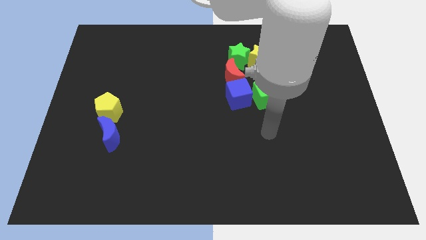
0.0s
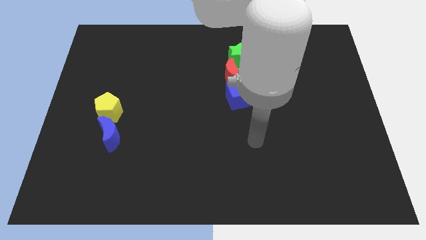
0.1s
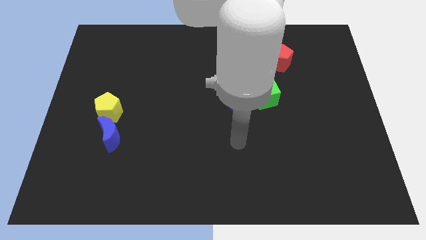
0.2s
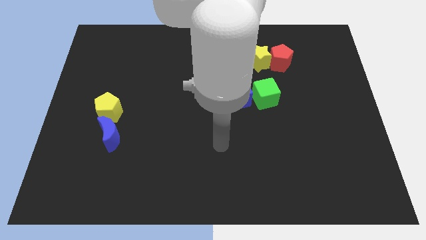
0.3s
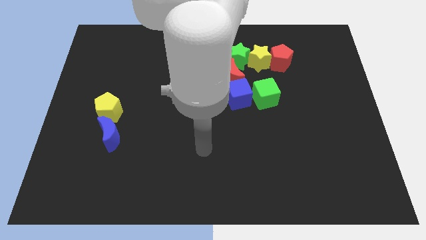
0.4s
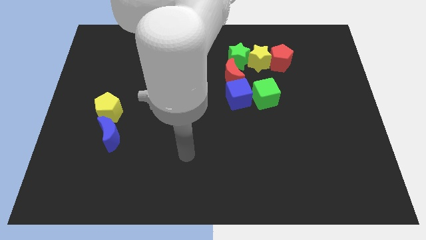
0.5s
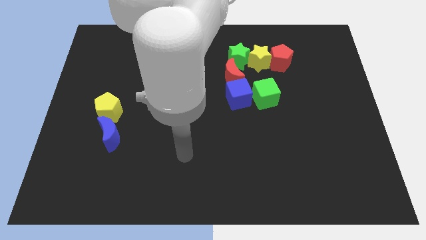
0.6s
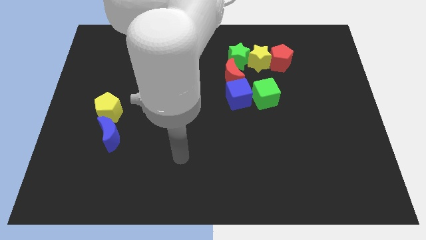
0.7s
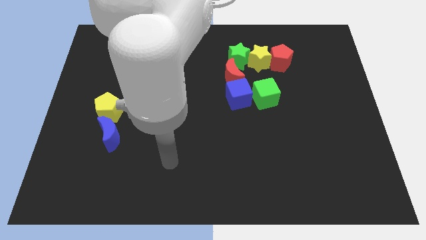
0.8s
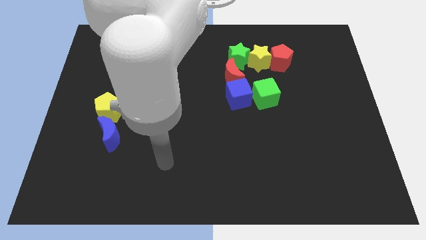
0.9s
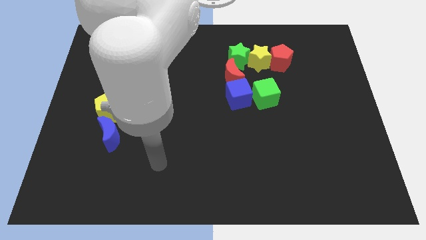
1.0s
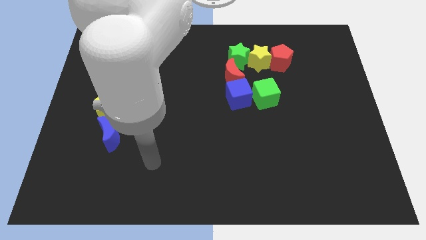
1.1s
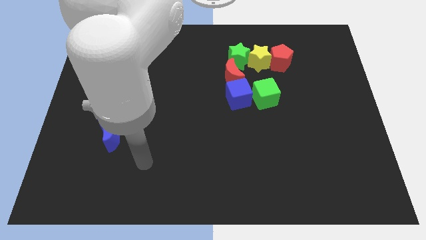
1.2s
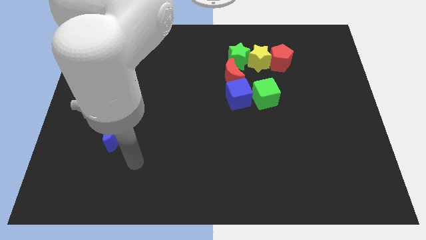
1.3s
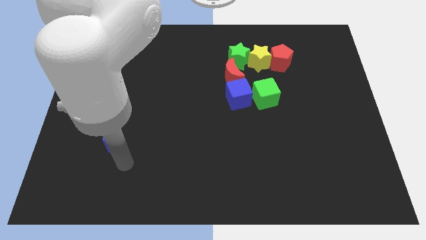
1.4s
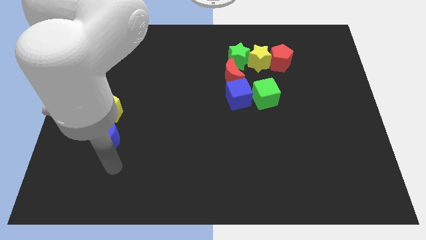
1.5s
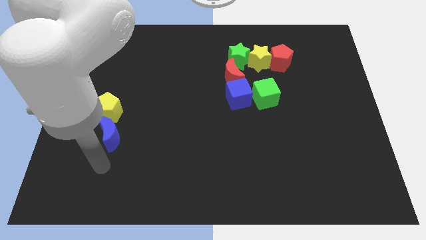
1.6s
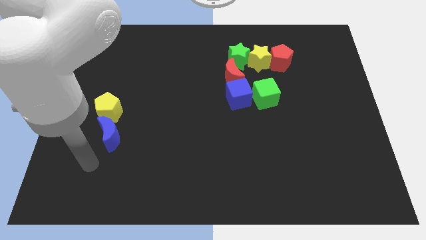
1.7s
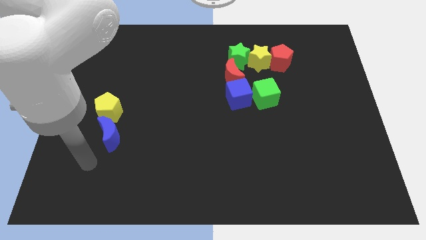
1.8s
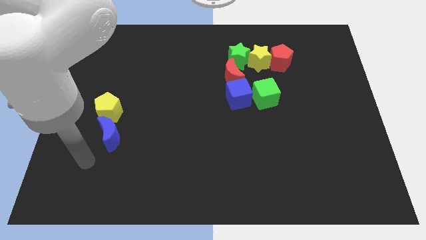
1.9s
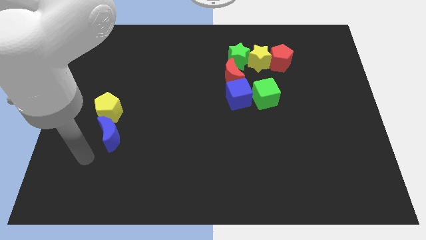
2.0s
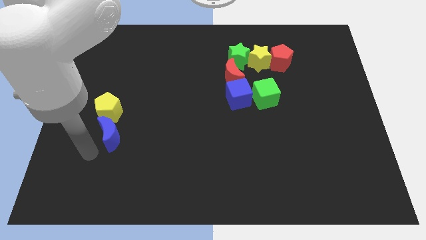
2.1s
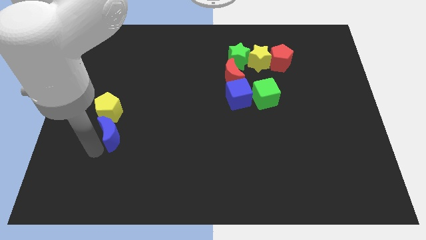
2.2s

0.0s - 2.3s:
move the arm from the center of the board to the bottom left of the board

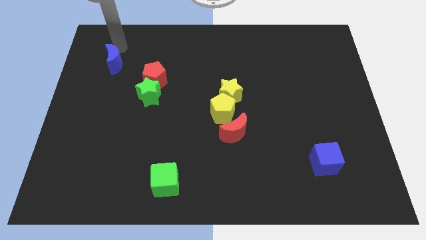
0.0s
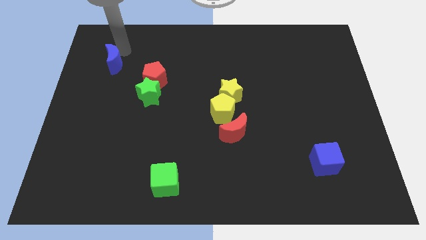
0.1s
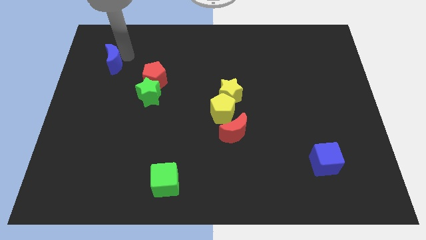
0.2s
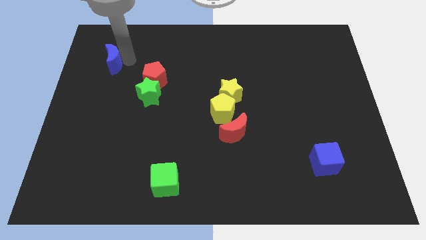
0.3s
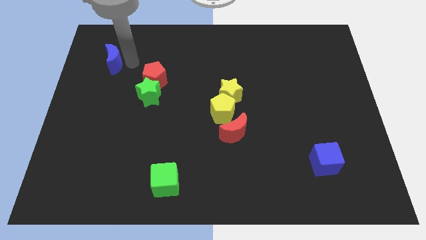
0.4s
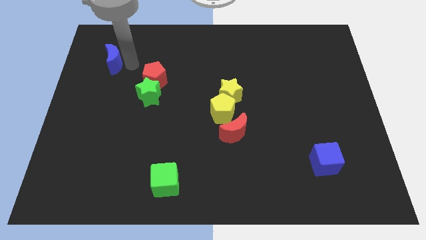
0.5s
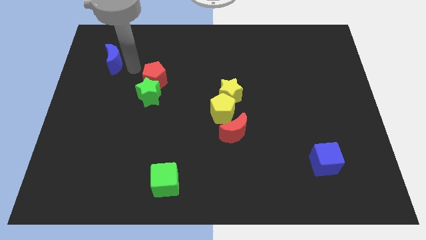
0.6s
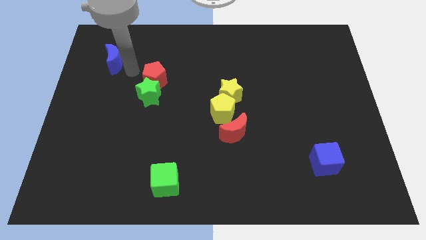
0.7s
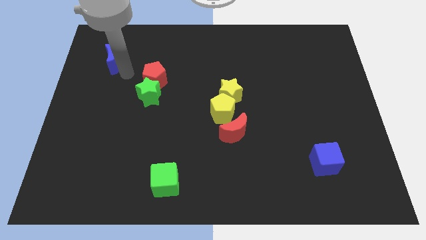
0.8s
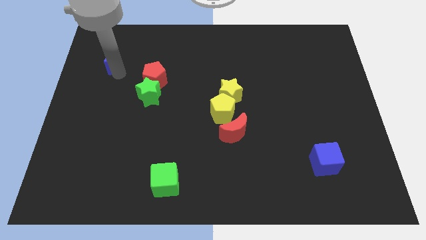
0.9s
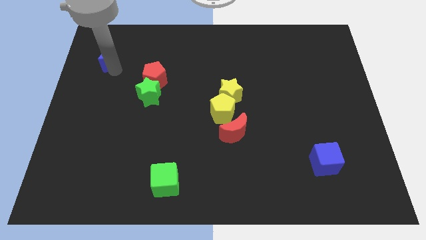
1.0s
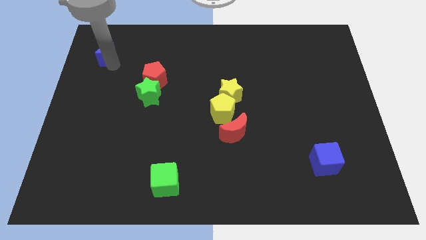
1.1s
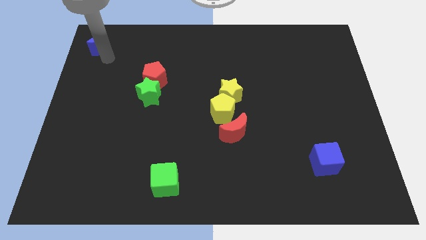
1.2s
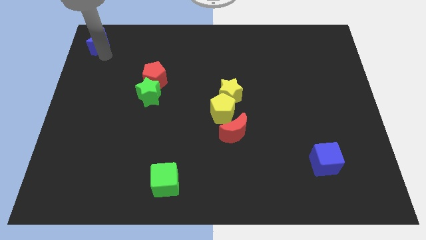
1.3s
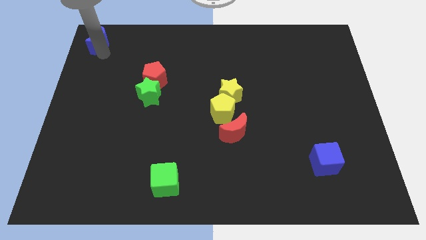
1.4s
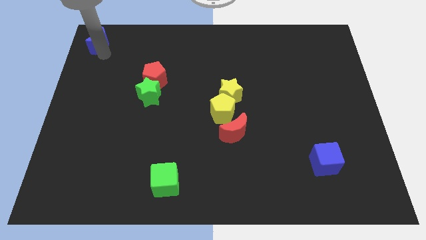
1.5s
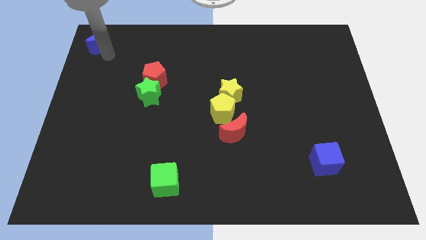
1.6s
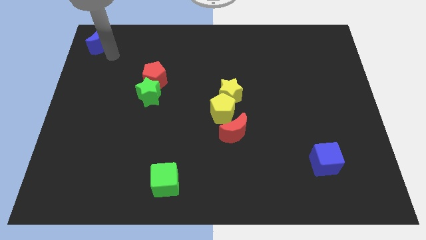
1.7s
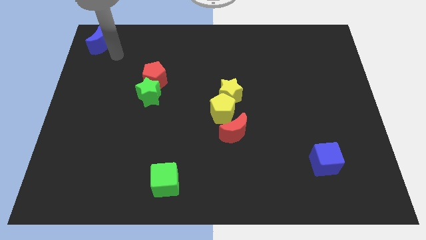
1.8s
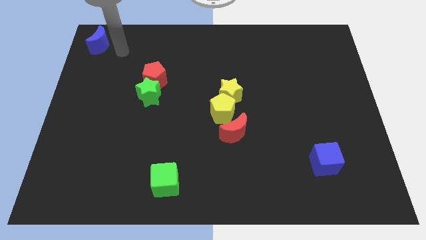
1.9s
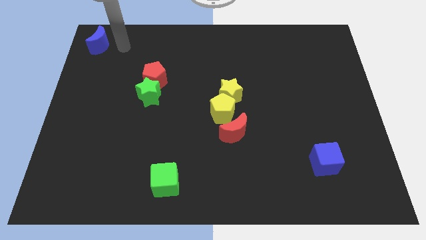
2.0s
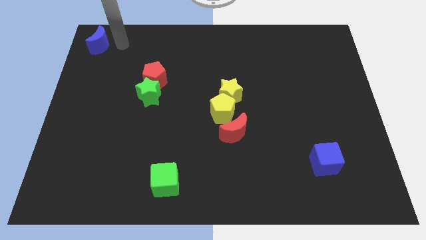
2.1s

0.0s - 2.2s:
place the blue crescent at the top left corner of the board

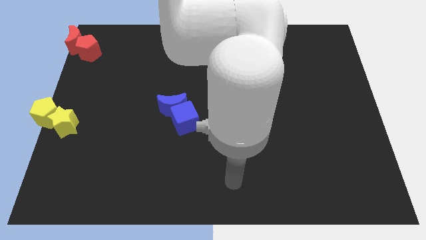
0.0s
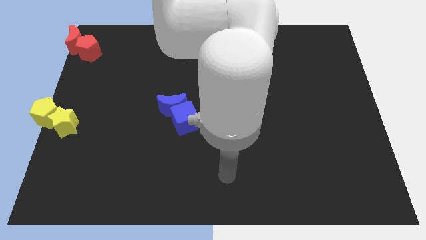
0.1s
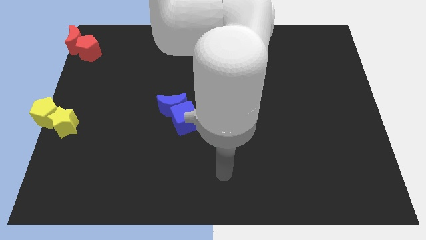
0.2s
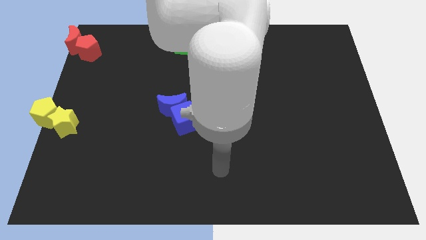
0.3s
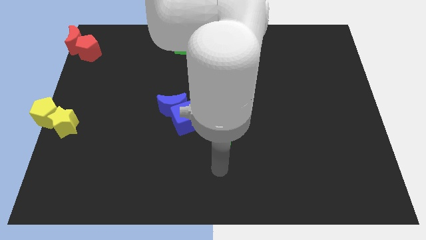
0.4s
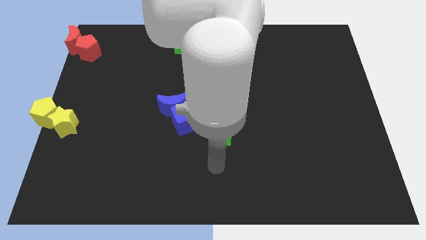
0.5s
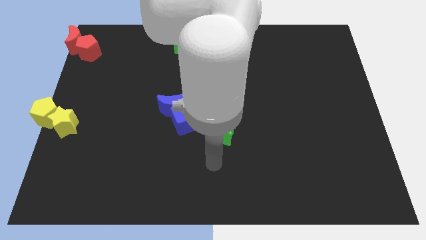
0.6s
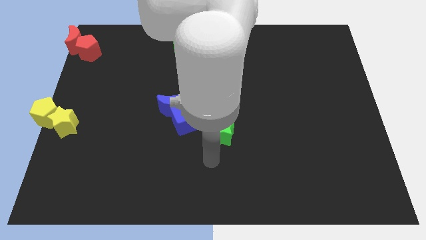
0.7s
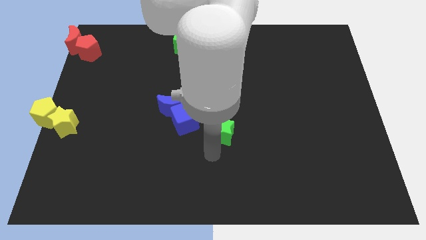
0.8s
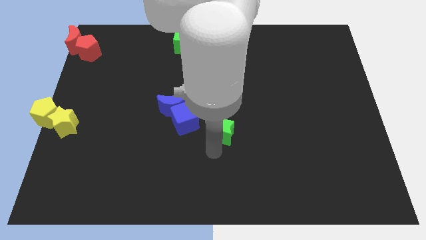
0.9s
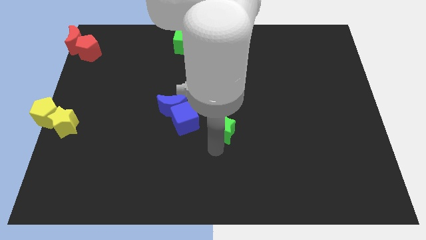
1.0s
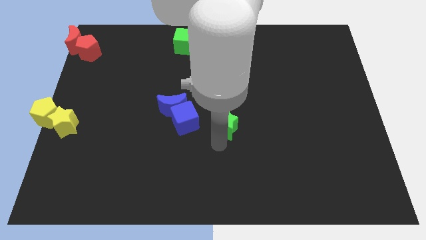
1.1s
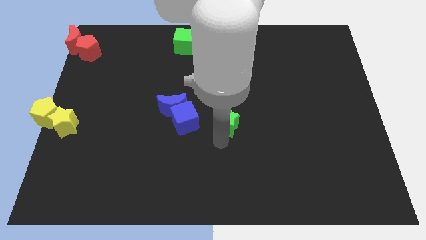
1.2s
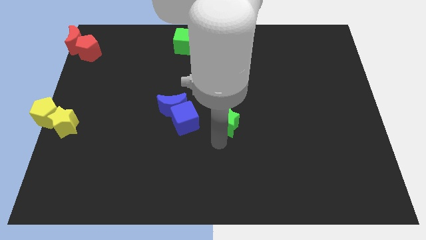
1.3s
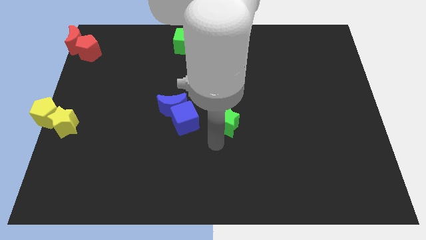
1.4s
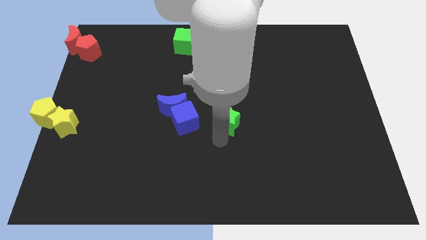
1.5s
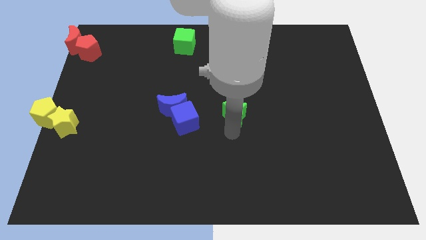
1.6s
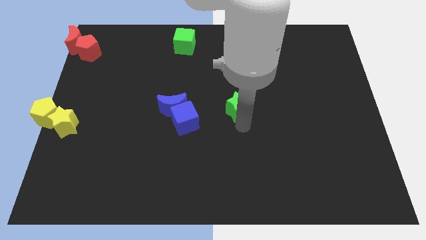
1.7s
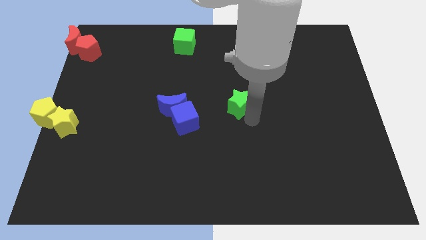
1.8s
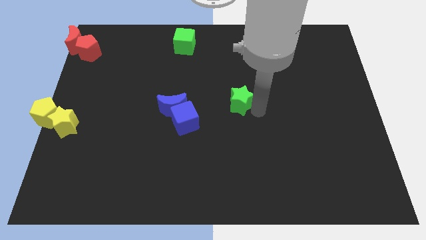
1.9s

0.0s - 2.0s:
place the green star diagonal to the green cube

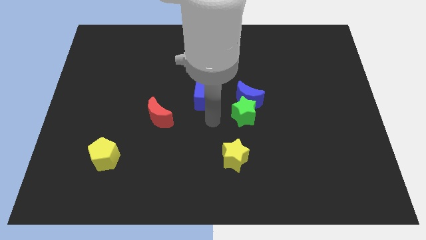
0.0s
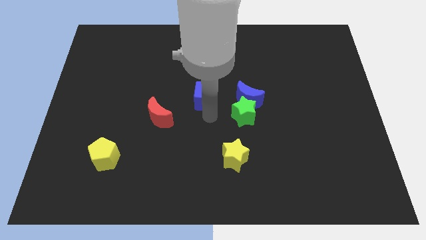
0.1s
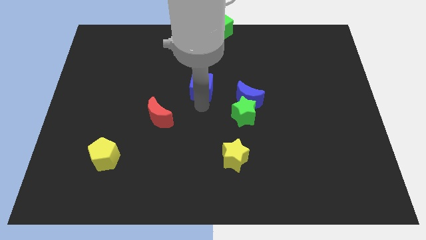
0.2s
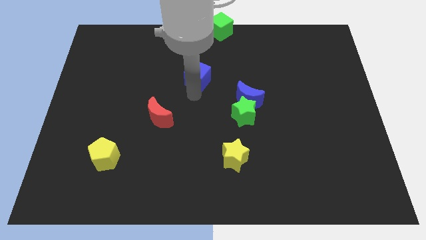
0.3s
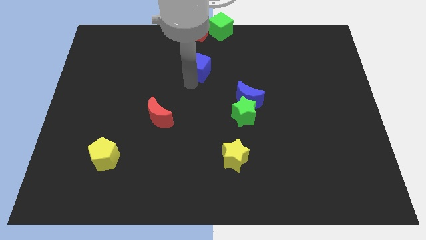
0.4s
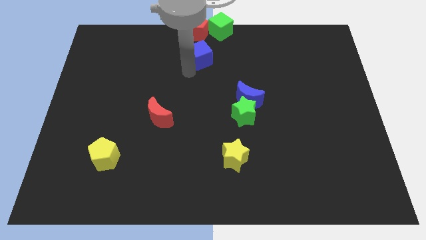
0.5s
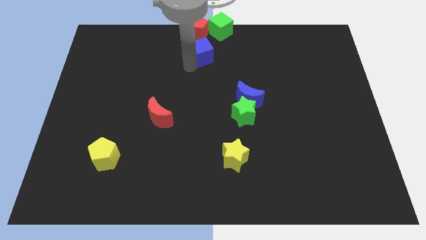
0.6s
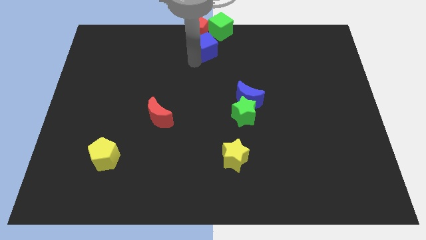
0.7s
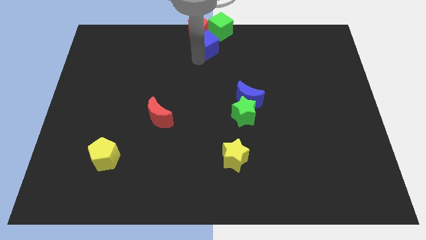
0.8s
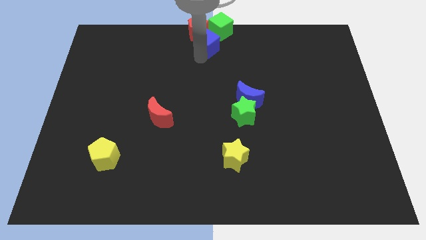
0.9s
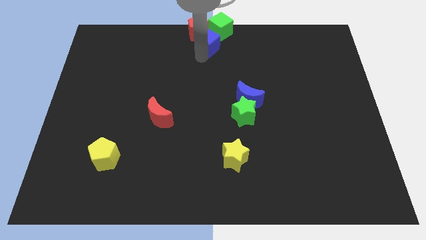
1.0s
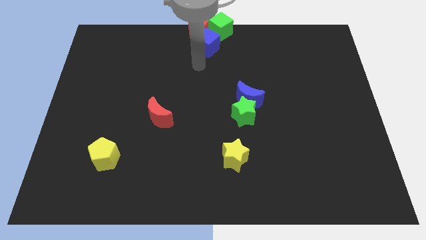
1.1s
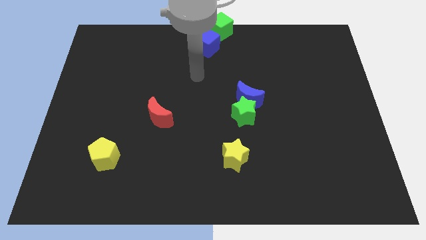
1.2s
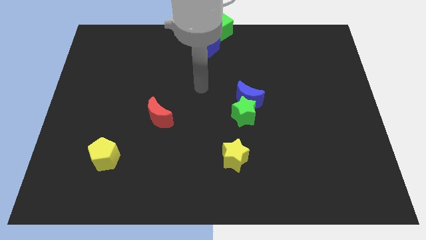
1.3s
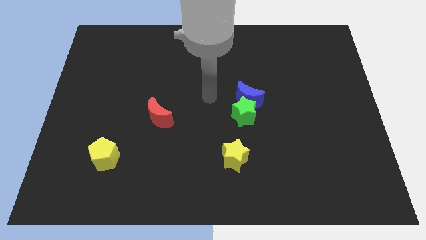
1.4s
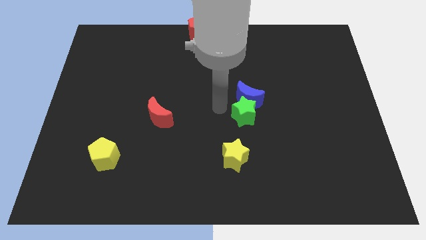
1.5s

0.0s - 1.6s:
slide the blue cube slightly towards up

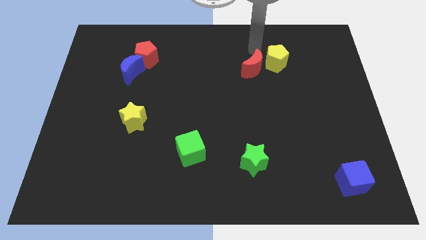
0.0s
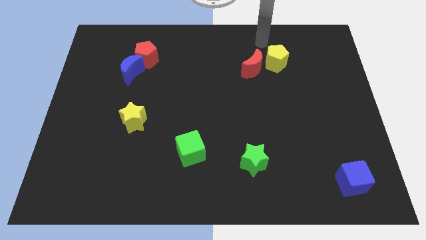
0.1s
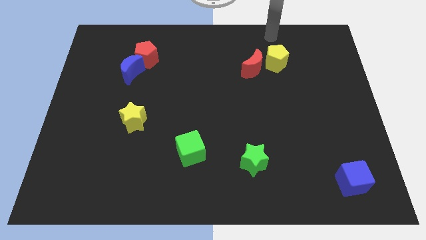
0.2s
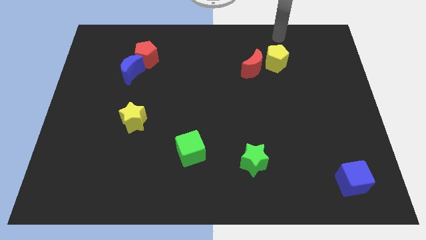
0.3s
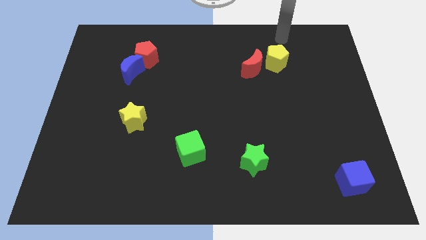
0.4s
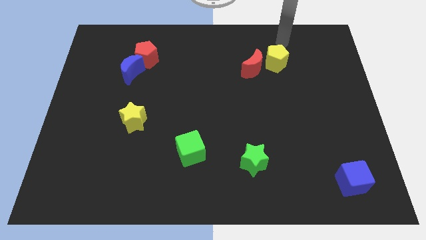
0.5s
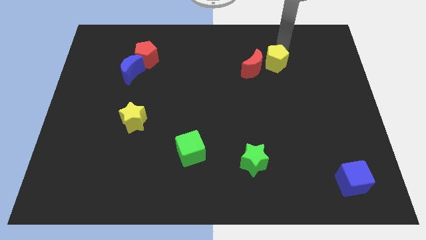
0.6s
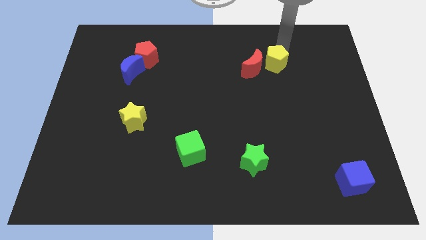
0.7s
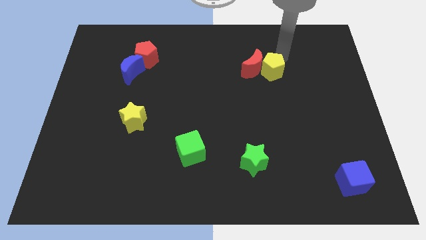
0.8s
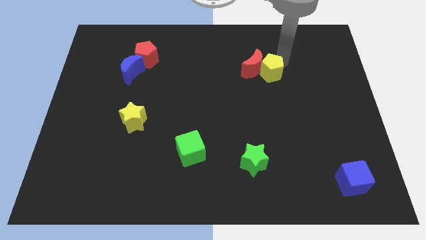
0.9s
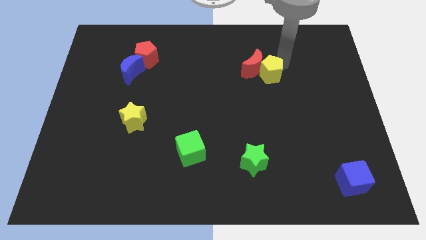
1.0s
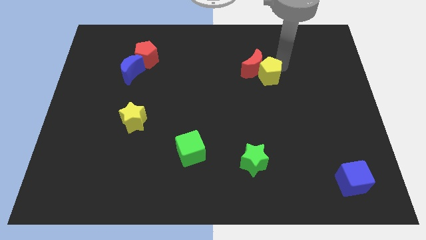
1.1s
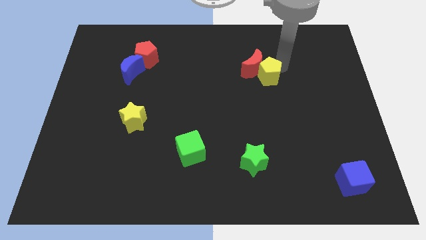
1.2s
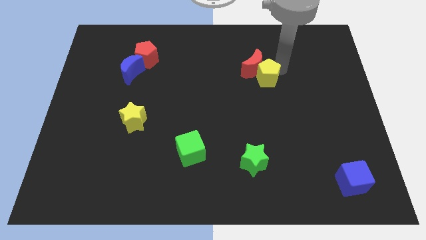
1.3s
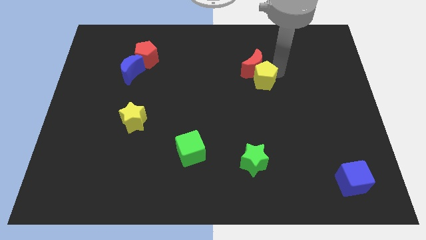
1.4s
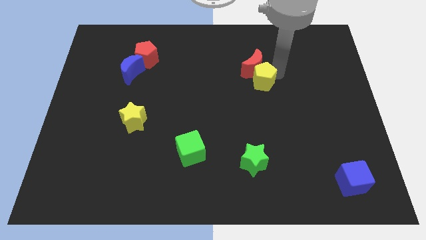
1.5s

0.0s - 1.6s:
move yellow pentagon slightly downwards
